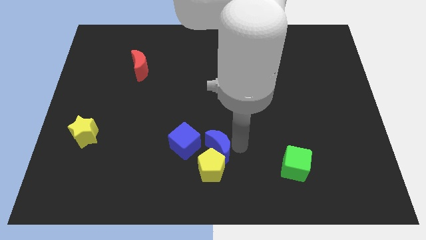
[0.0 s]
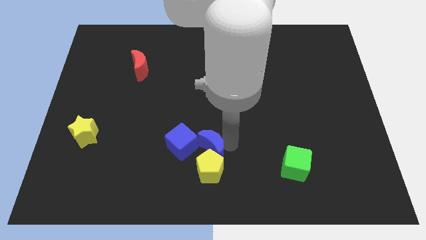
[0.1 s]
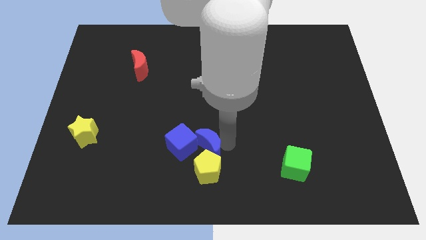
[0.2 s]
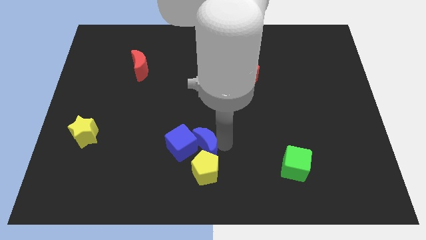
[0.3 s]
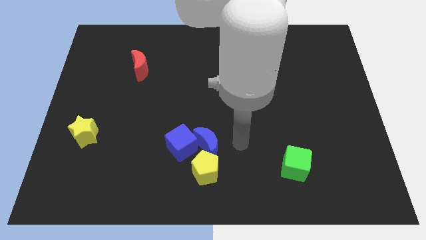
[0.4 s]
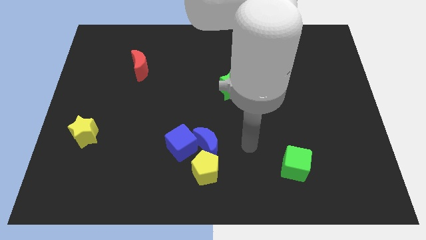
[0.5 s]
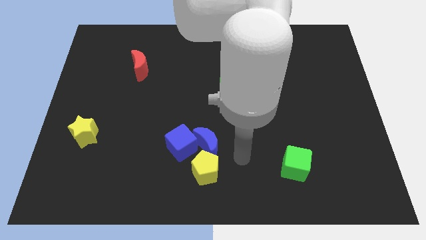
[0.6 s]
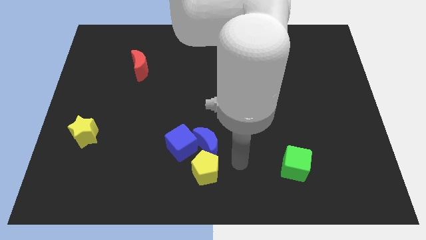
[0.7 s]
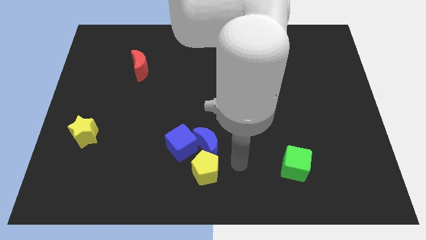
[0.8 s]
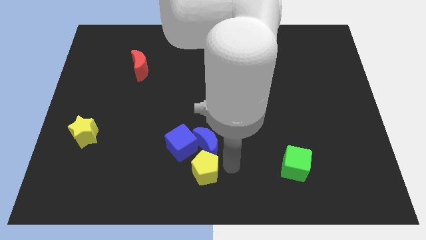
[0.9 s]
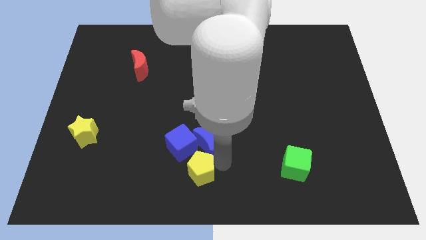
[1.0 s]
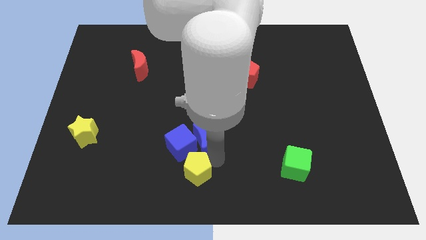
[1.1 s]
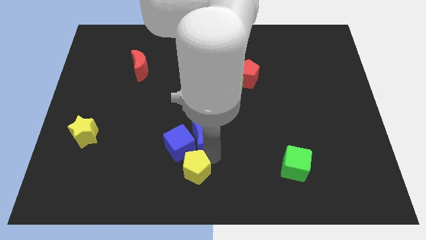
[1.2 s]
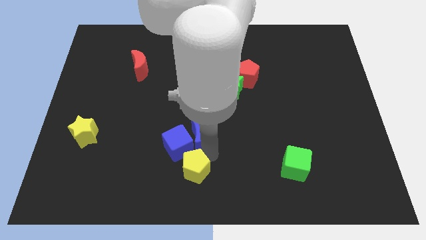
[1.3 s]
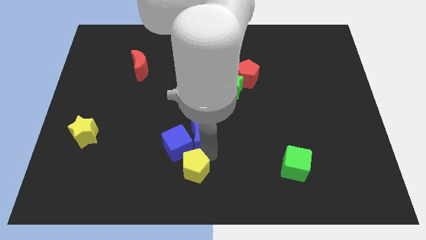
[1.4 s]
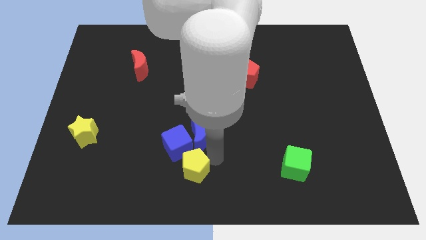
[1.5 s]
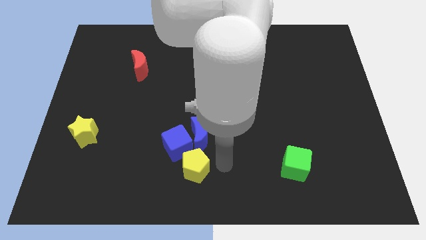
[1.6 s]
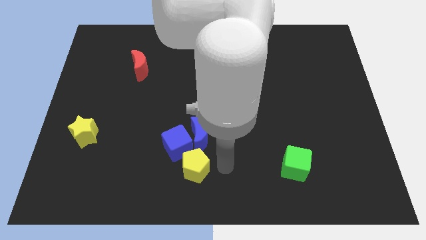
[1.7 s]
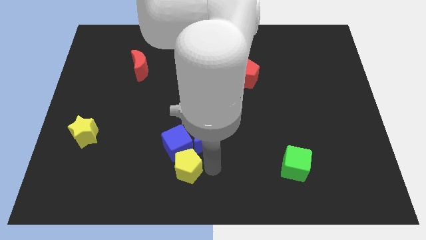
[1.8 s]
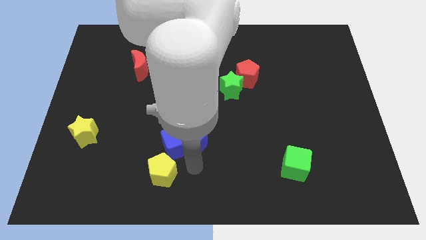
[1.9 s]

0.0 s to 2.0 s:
slightly push the blue moon and yellow pentagon into blue cube

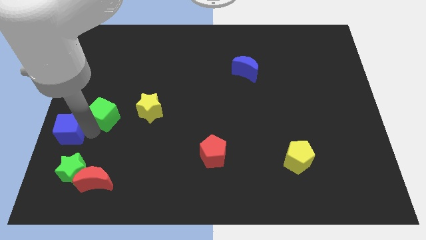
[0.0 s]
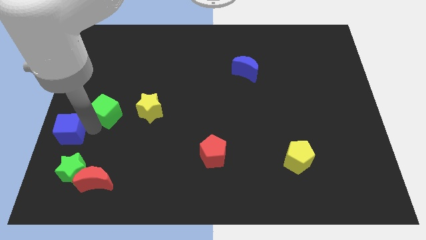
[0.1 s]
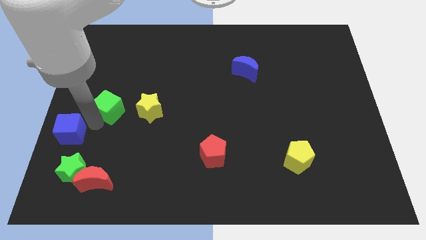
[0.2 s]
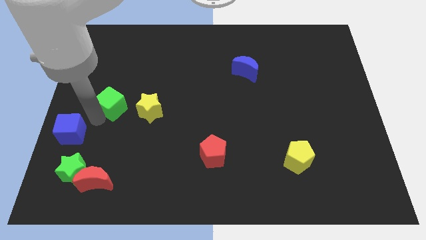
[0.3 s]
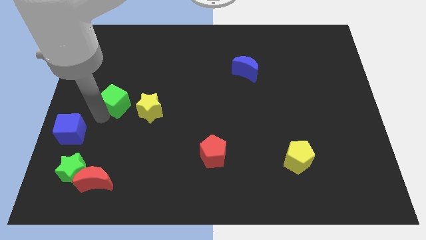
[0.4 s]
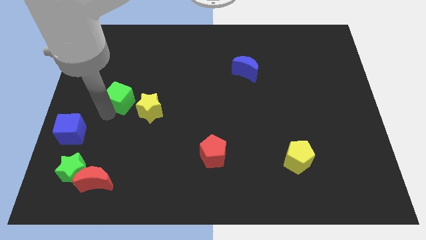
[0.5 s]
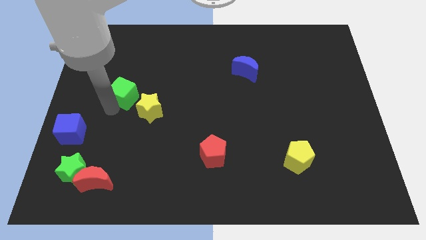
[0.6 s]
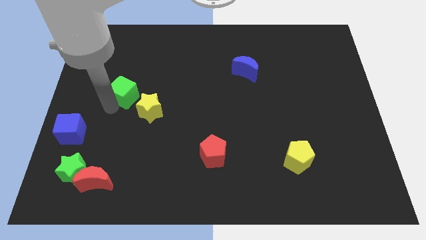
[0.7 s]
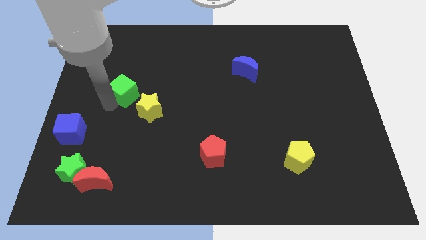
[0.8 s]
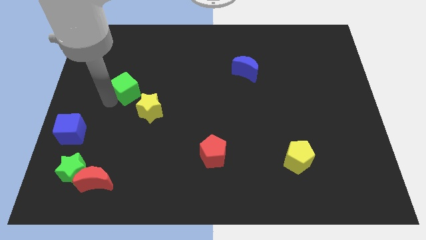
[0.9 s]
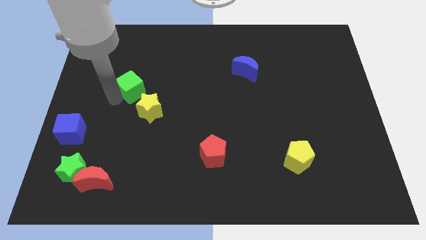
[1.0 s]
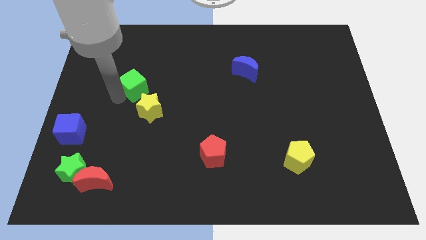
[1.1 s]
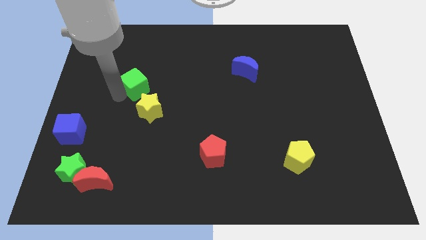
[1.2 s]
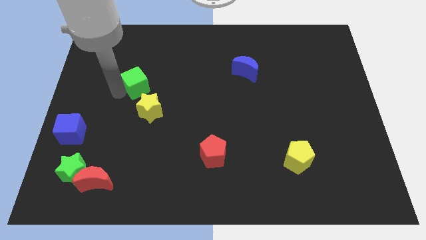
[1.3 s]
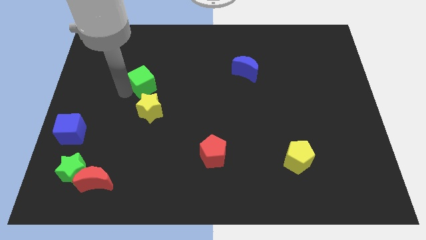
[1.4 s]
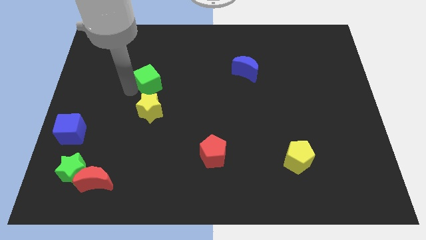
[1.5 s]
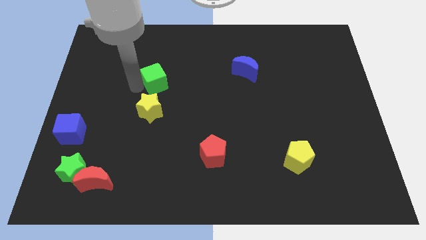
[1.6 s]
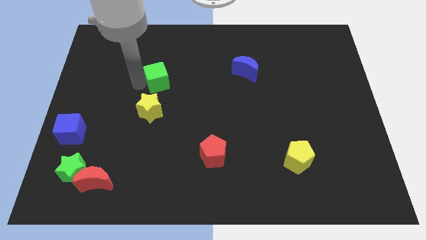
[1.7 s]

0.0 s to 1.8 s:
push the green cube to the top side of the yellow star

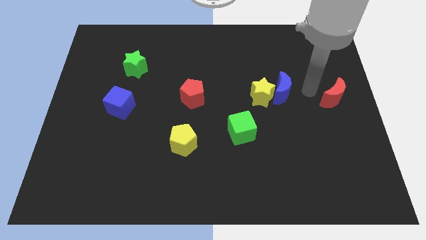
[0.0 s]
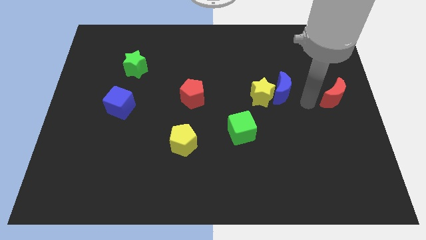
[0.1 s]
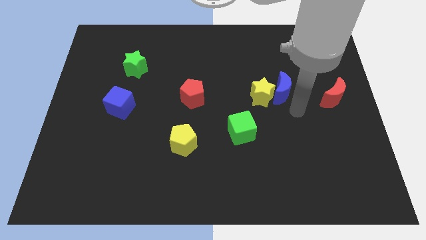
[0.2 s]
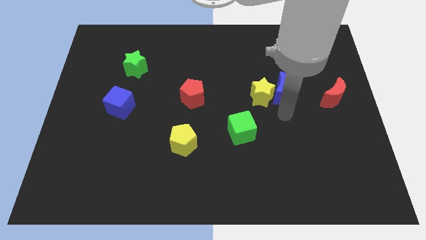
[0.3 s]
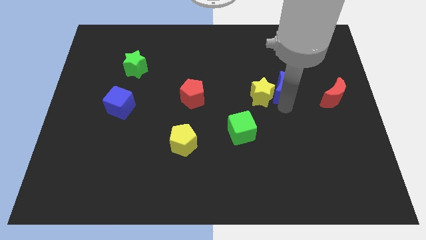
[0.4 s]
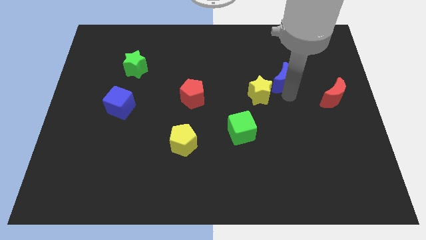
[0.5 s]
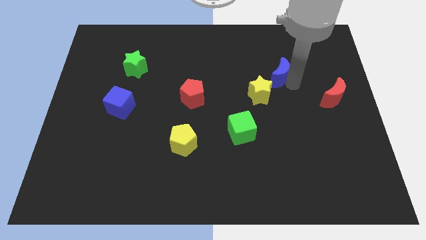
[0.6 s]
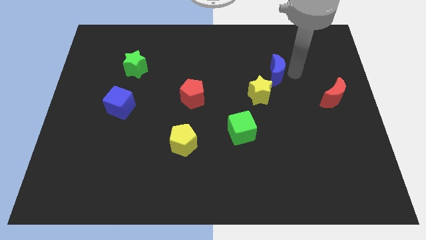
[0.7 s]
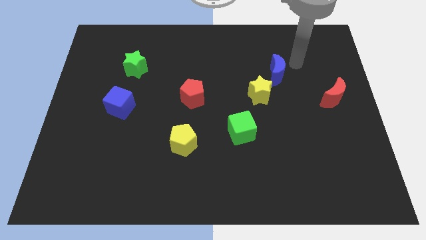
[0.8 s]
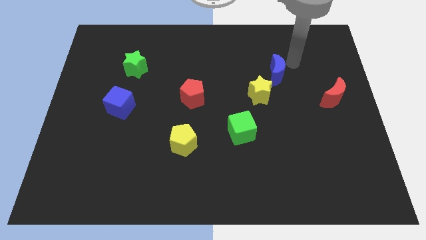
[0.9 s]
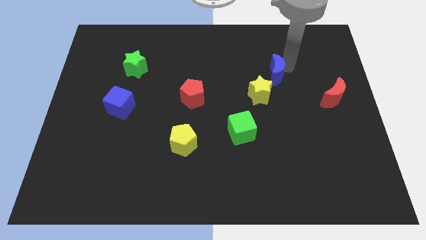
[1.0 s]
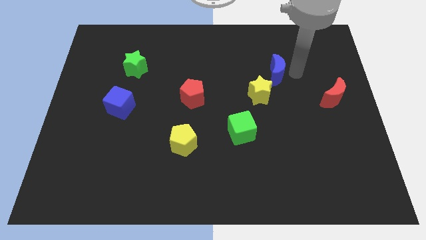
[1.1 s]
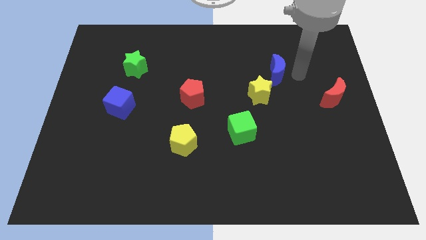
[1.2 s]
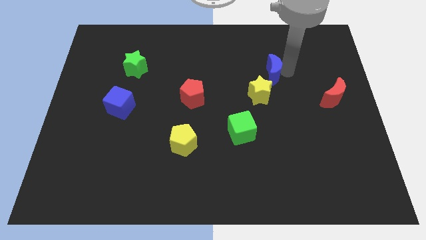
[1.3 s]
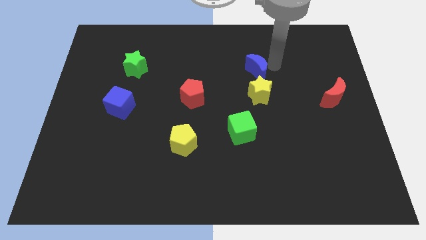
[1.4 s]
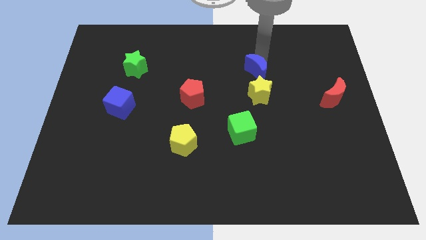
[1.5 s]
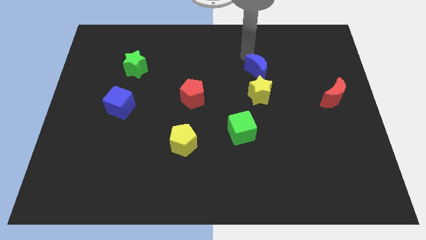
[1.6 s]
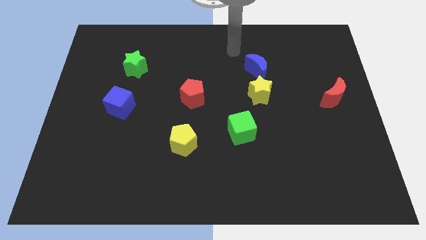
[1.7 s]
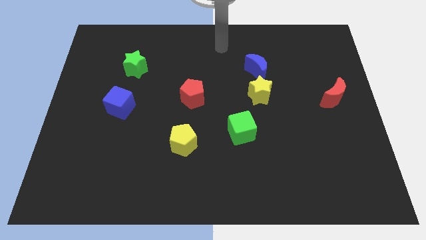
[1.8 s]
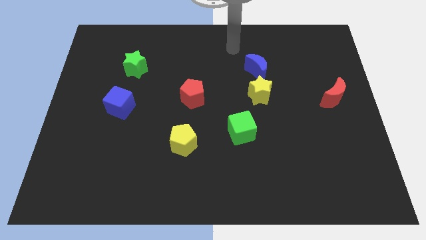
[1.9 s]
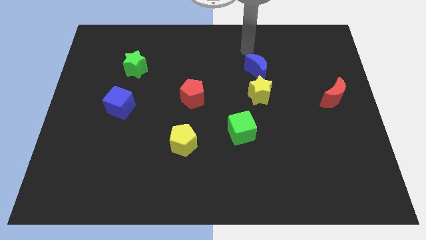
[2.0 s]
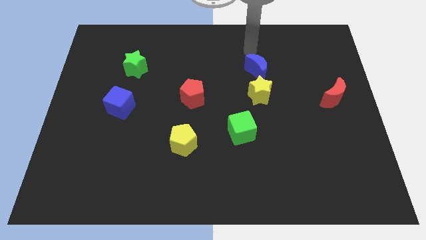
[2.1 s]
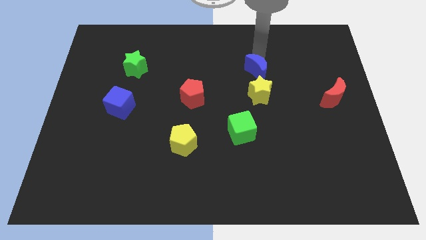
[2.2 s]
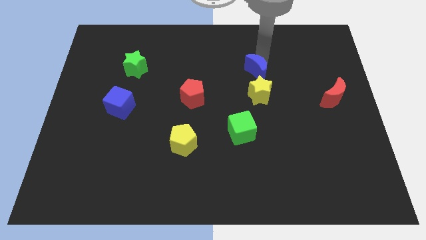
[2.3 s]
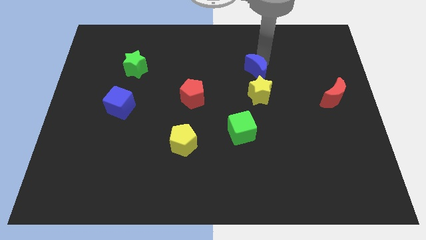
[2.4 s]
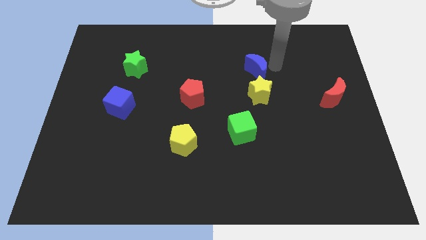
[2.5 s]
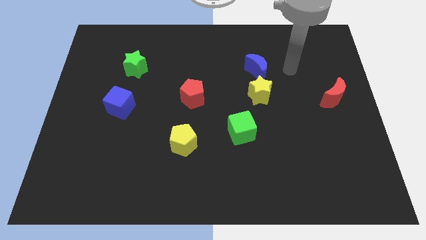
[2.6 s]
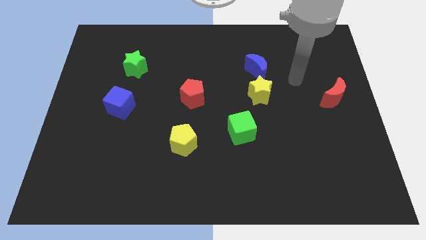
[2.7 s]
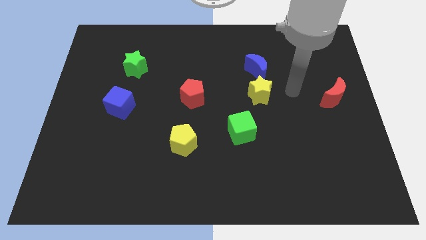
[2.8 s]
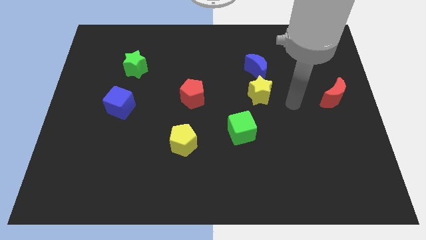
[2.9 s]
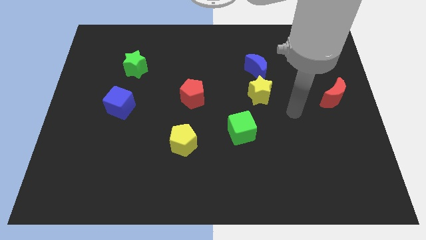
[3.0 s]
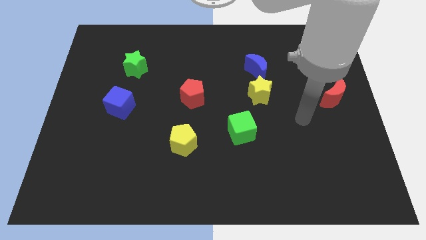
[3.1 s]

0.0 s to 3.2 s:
place the blue crescent at the top of yellow star

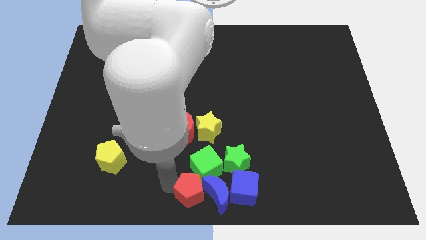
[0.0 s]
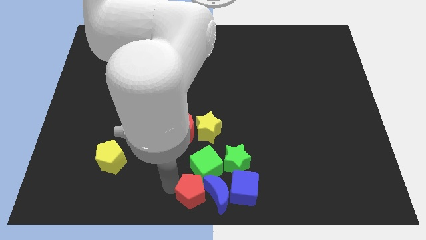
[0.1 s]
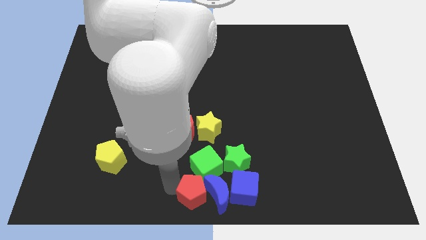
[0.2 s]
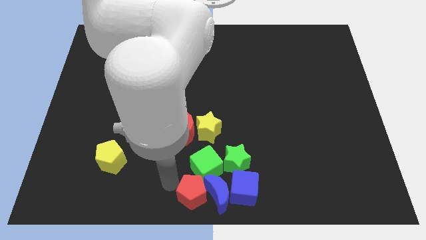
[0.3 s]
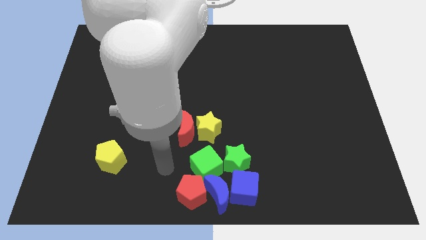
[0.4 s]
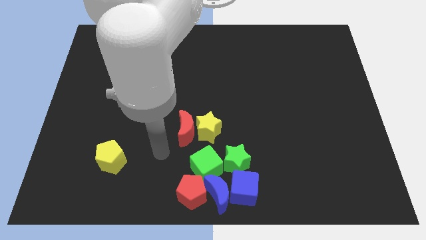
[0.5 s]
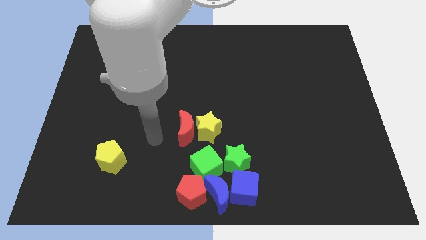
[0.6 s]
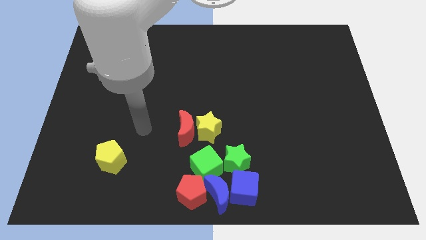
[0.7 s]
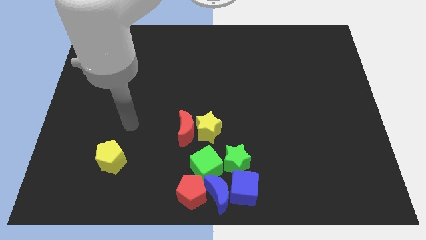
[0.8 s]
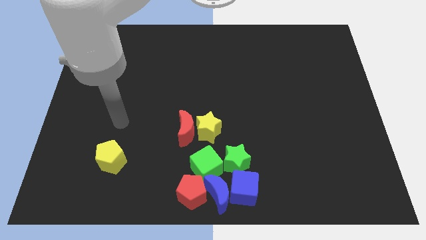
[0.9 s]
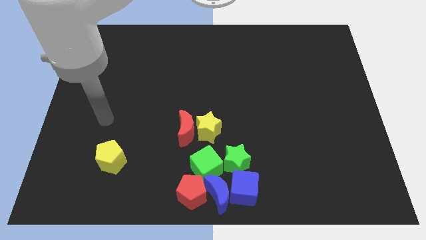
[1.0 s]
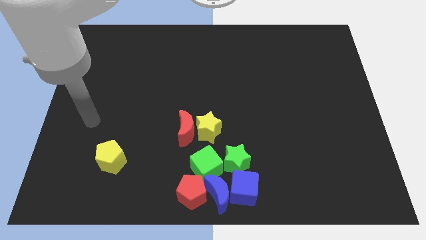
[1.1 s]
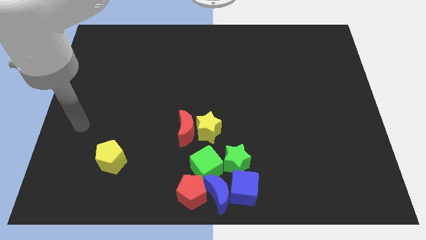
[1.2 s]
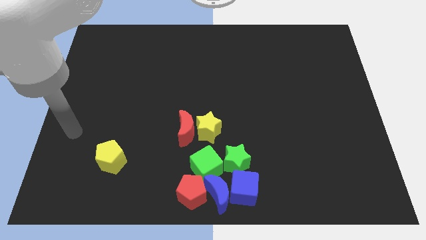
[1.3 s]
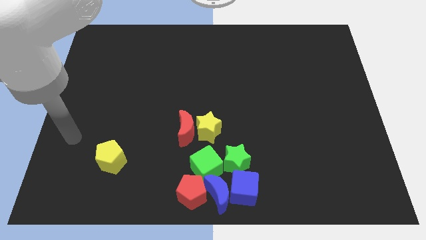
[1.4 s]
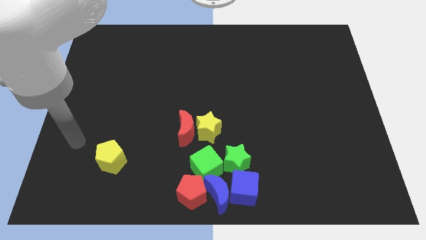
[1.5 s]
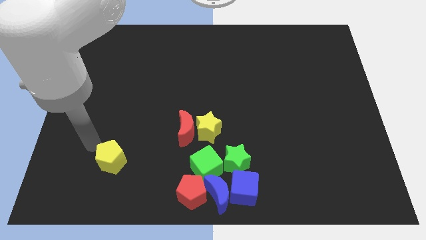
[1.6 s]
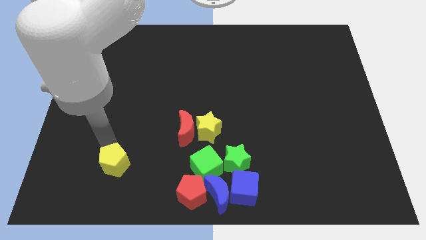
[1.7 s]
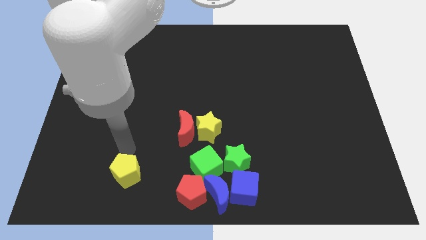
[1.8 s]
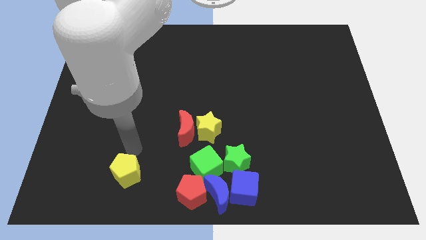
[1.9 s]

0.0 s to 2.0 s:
slide the yellow pentagon towards the red pentagon
